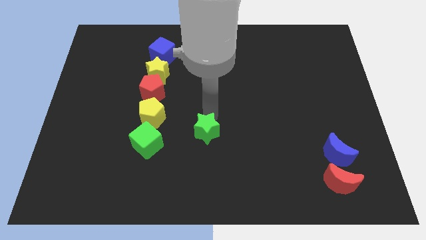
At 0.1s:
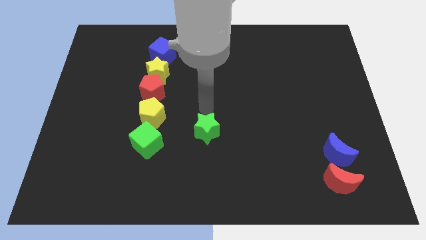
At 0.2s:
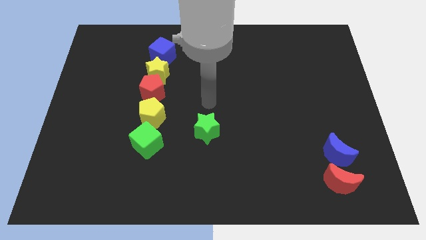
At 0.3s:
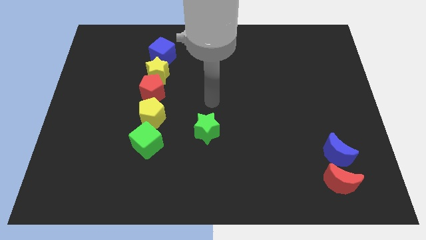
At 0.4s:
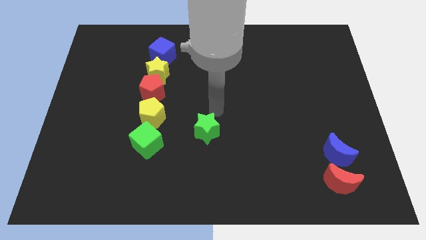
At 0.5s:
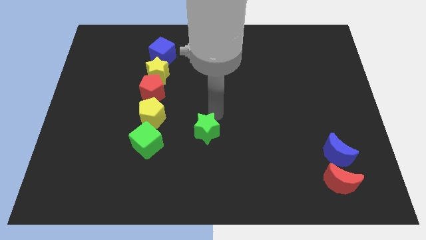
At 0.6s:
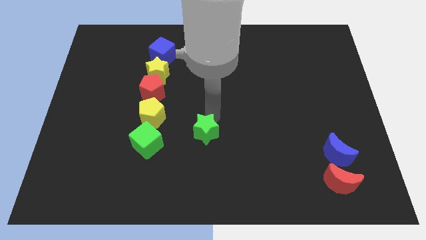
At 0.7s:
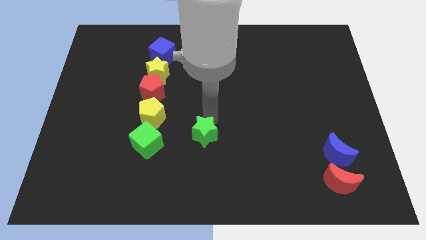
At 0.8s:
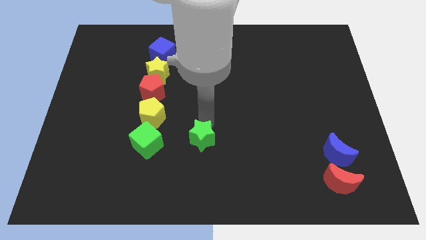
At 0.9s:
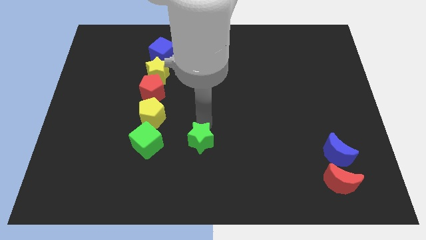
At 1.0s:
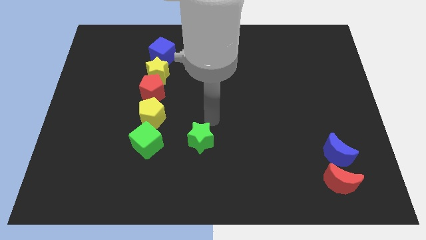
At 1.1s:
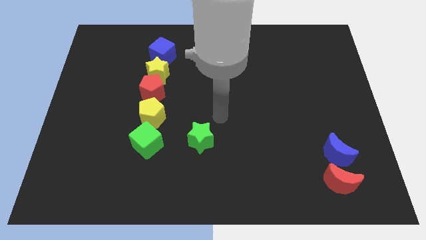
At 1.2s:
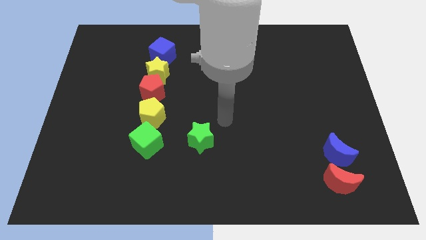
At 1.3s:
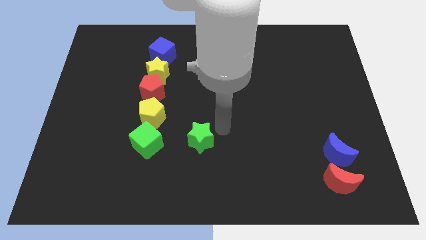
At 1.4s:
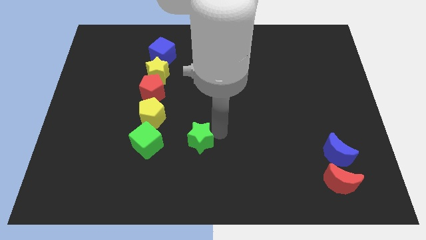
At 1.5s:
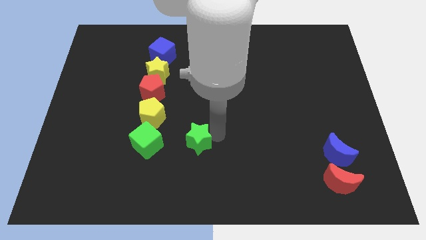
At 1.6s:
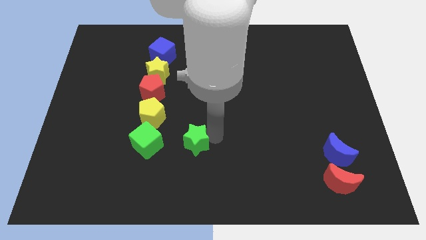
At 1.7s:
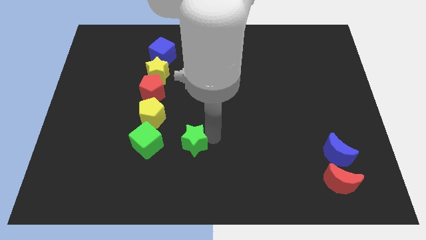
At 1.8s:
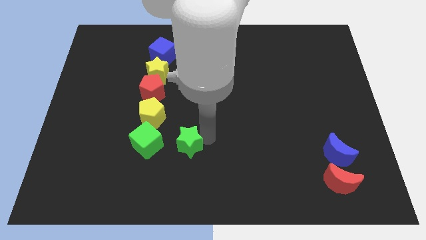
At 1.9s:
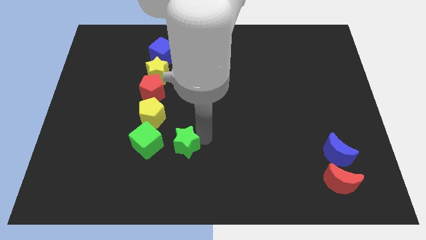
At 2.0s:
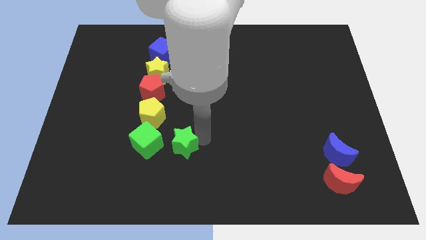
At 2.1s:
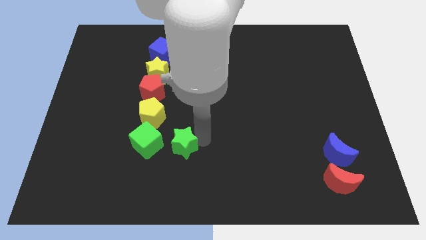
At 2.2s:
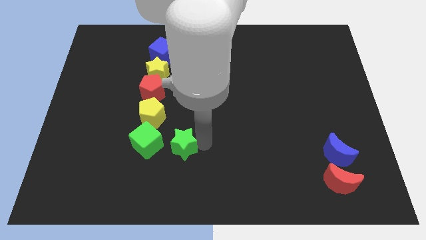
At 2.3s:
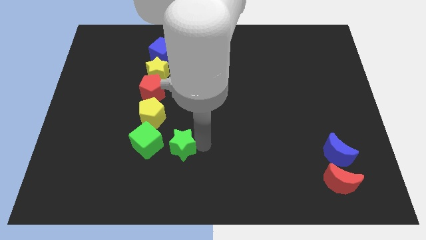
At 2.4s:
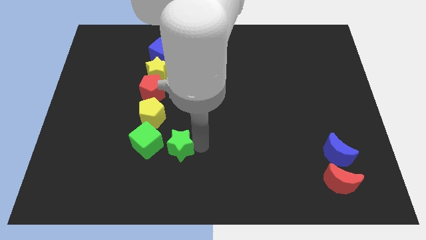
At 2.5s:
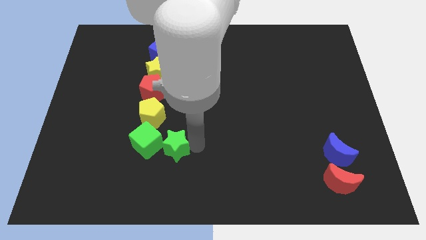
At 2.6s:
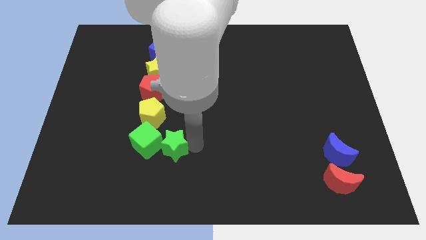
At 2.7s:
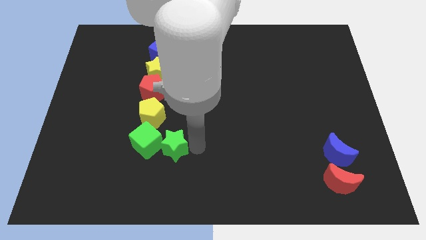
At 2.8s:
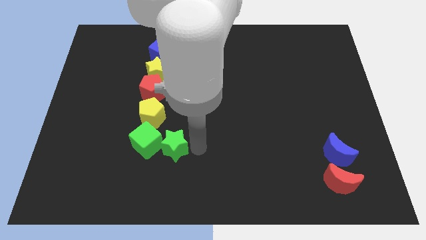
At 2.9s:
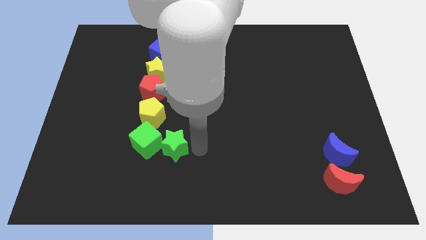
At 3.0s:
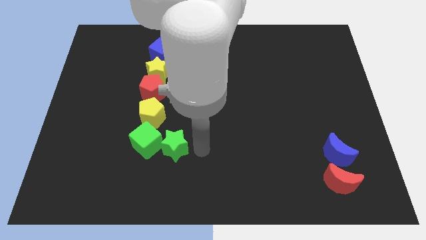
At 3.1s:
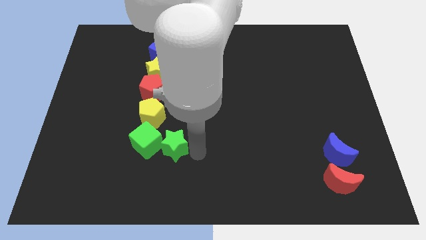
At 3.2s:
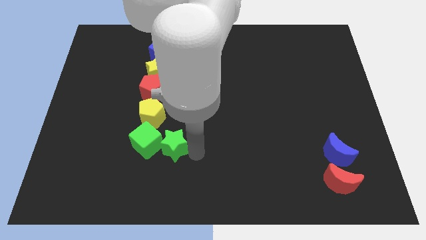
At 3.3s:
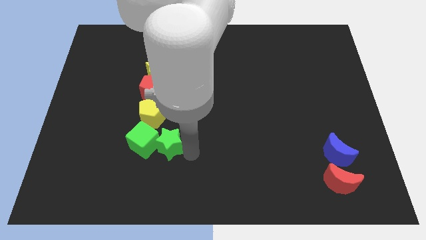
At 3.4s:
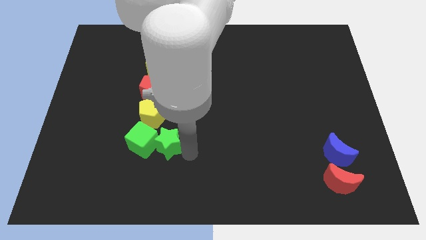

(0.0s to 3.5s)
push the green star into the right side of the green cube

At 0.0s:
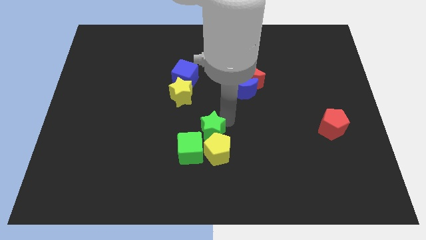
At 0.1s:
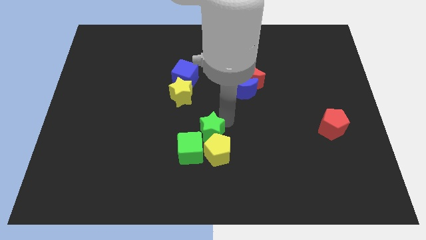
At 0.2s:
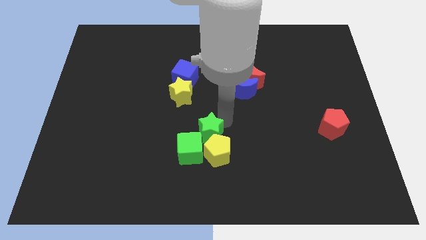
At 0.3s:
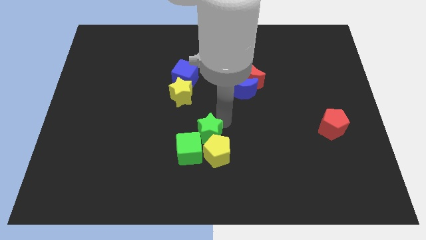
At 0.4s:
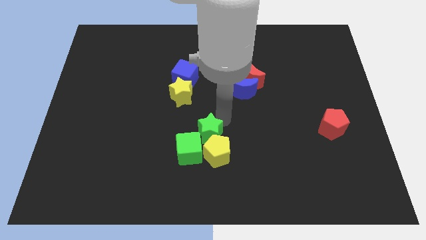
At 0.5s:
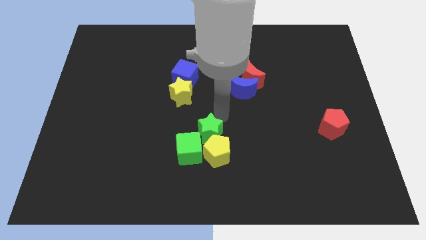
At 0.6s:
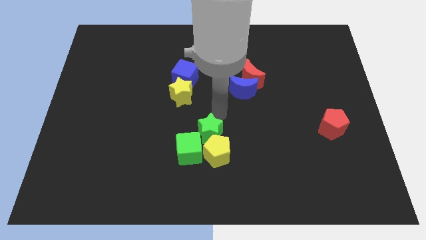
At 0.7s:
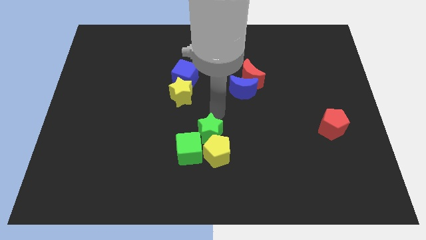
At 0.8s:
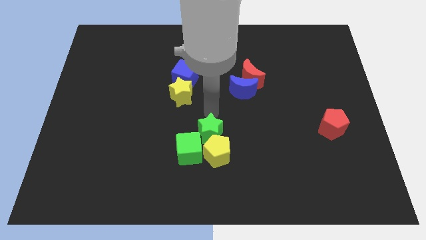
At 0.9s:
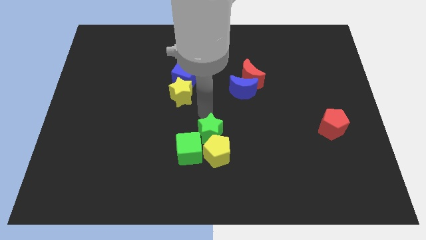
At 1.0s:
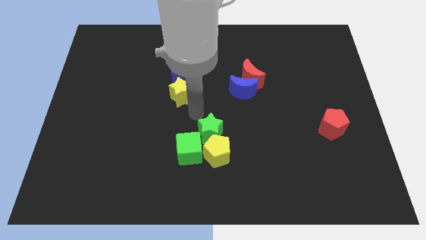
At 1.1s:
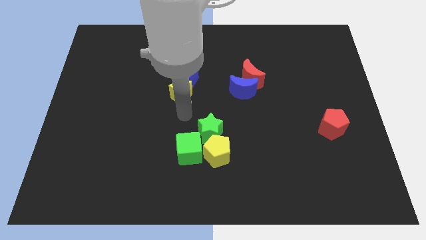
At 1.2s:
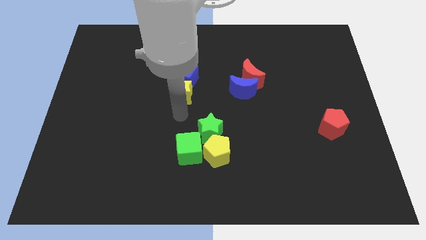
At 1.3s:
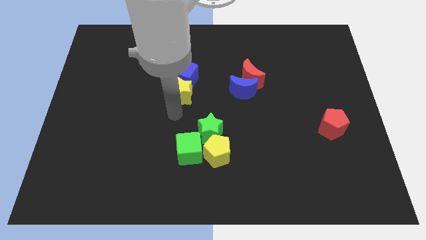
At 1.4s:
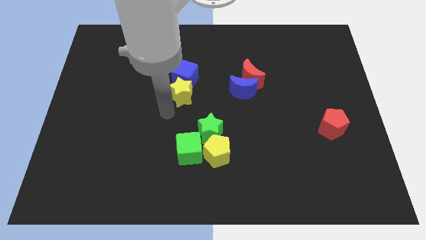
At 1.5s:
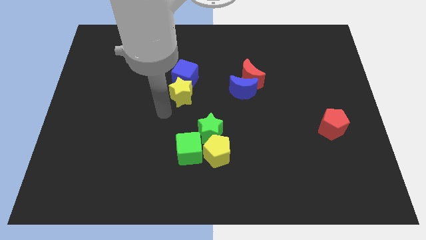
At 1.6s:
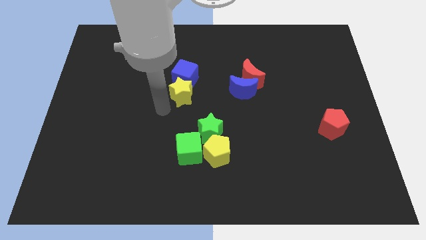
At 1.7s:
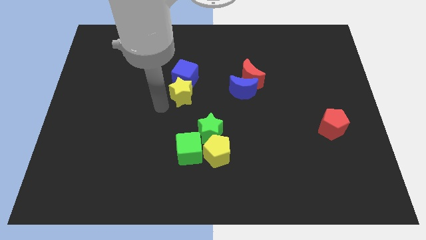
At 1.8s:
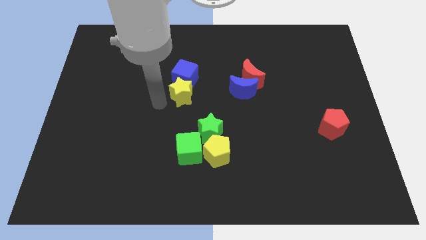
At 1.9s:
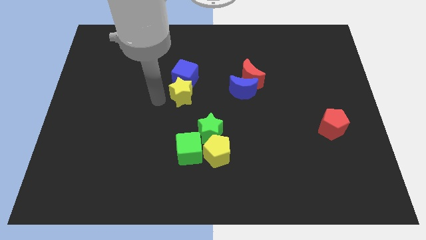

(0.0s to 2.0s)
adjust the green star into the triangle of green cube and yellow pentagon from the top

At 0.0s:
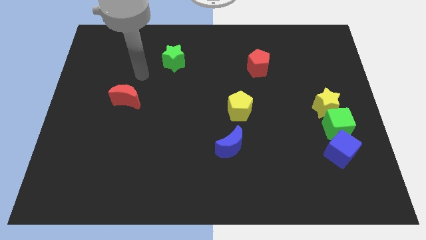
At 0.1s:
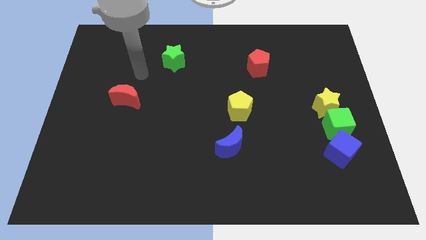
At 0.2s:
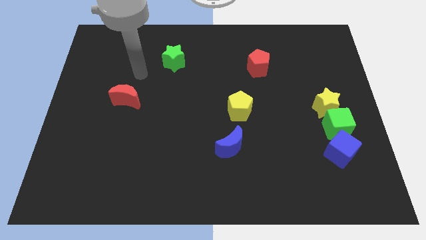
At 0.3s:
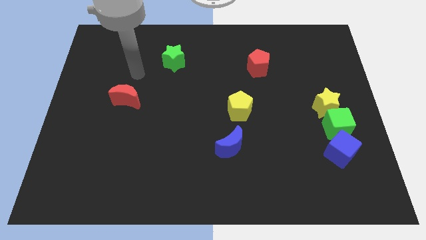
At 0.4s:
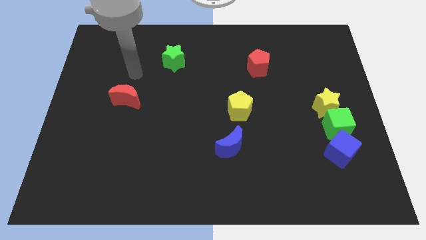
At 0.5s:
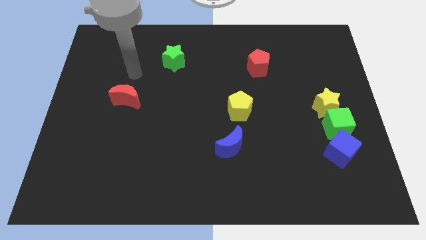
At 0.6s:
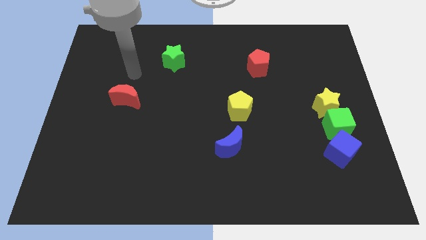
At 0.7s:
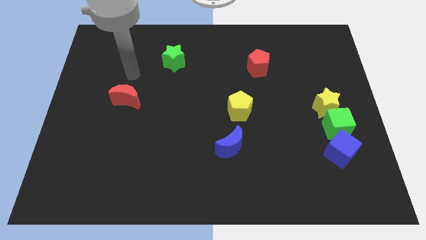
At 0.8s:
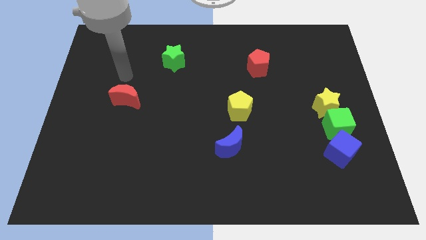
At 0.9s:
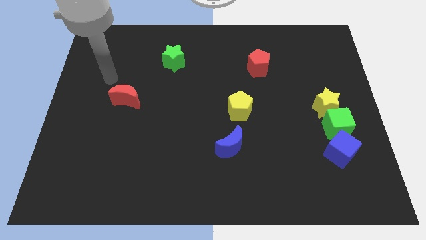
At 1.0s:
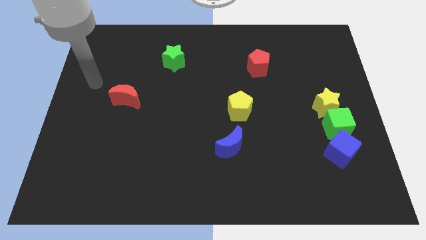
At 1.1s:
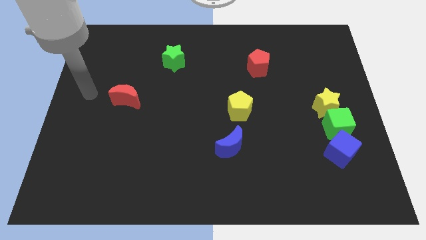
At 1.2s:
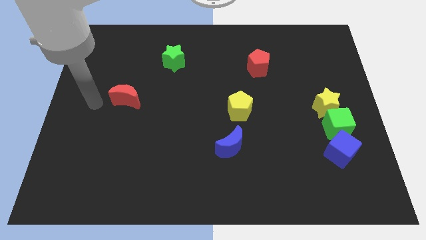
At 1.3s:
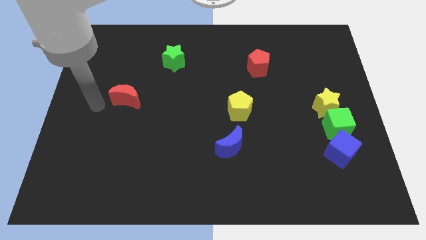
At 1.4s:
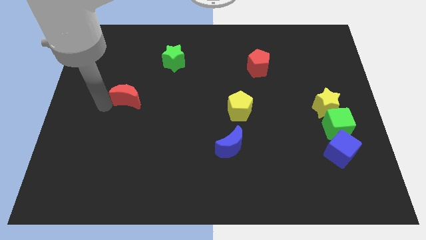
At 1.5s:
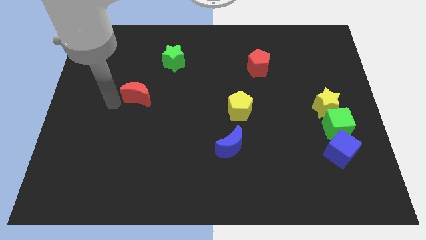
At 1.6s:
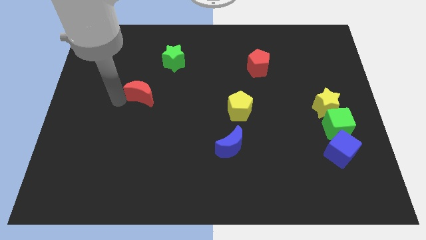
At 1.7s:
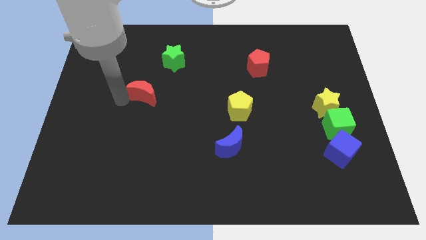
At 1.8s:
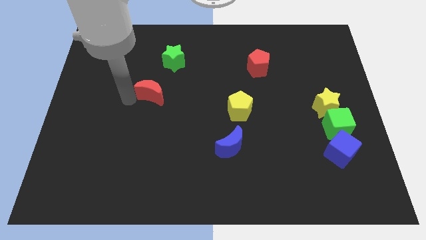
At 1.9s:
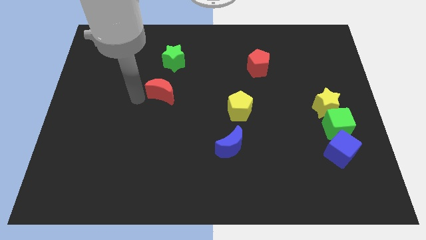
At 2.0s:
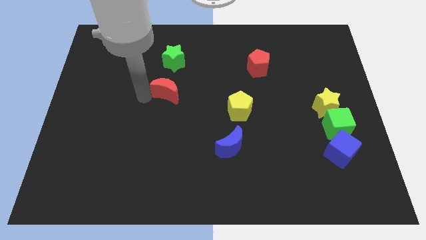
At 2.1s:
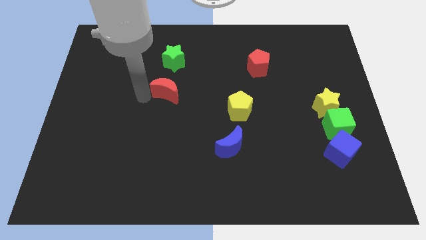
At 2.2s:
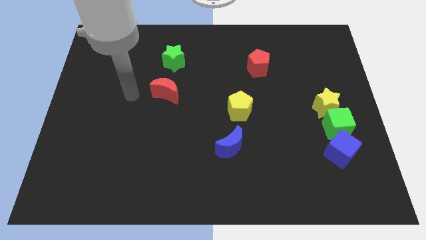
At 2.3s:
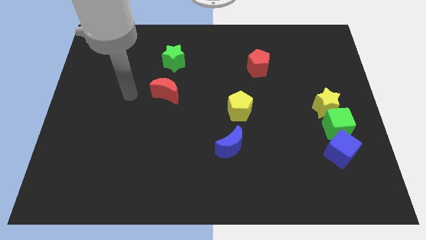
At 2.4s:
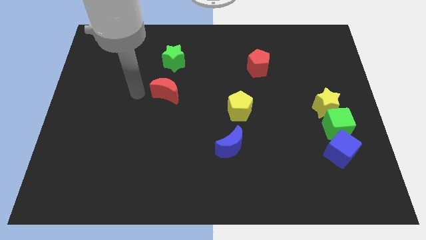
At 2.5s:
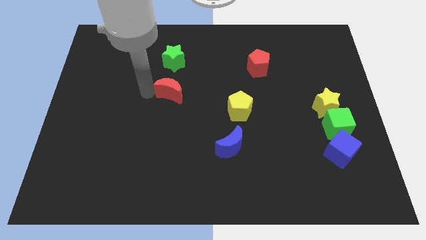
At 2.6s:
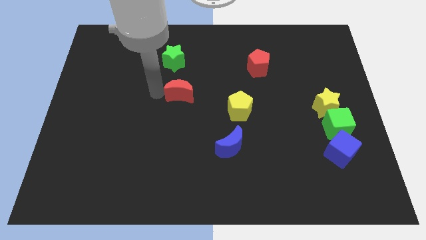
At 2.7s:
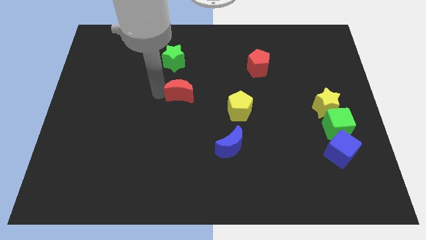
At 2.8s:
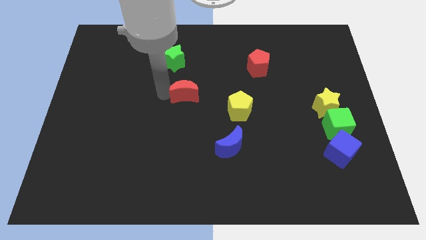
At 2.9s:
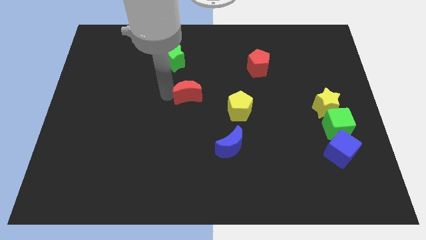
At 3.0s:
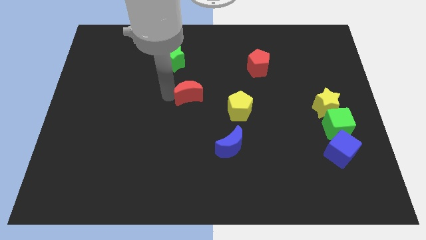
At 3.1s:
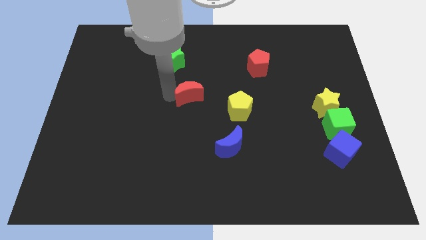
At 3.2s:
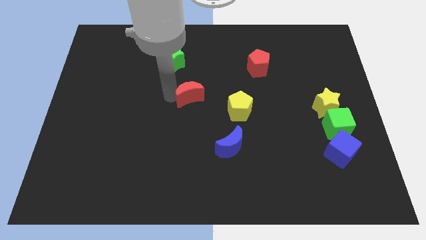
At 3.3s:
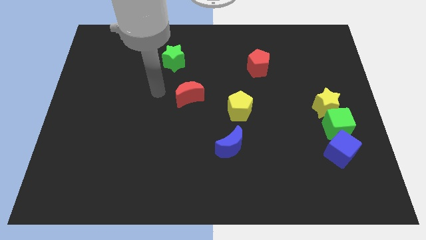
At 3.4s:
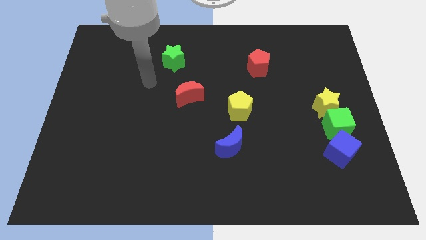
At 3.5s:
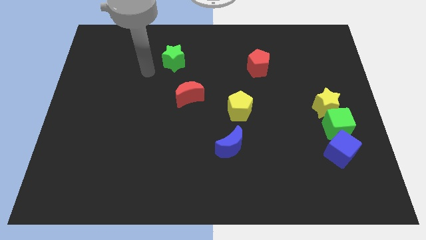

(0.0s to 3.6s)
push the red crescent towards the yellow pentagon
